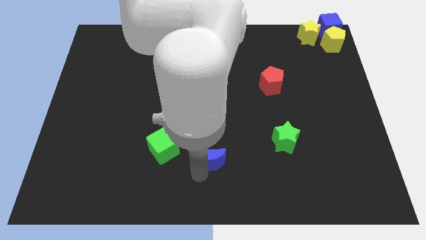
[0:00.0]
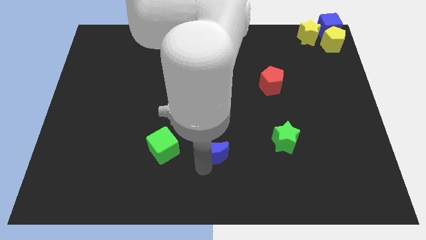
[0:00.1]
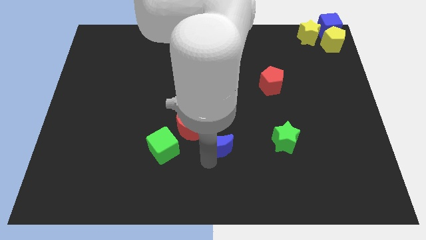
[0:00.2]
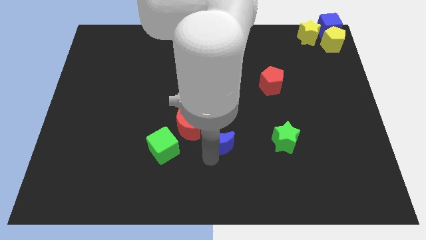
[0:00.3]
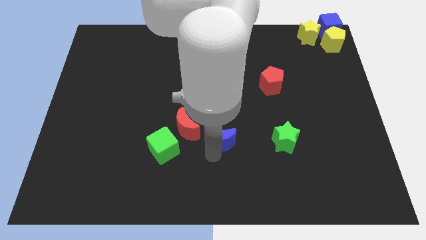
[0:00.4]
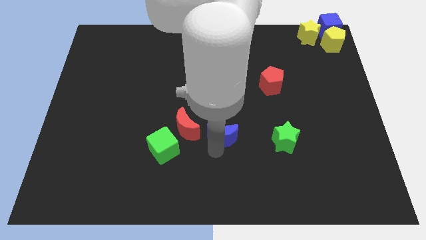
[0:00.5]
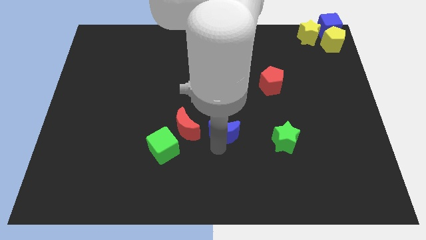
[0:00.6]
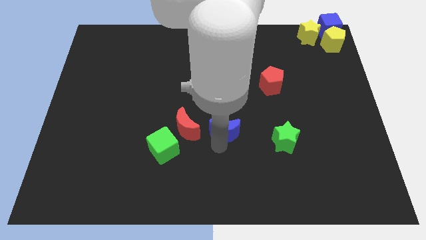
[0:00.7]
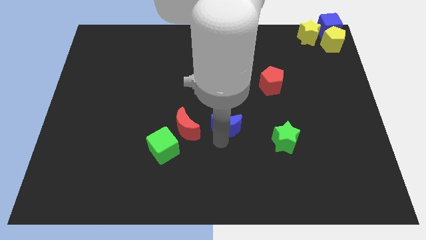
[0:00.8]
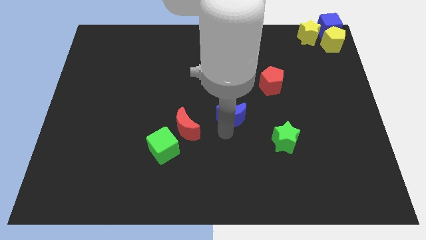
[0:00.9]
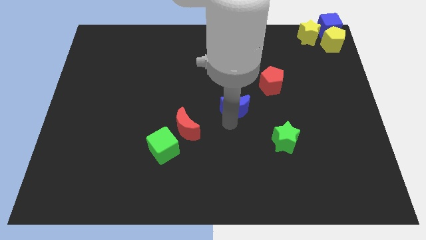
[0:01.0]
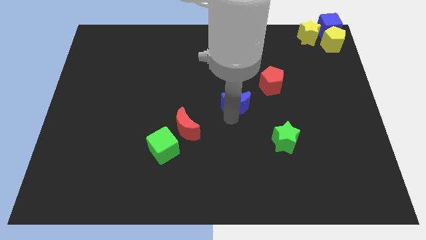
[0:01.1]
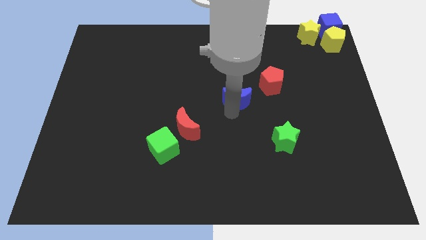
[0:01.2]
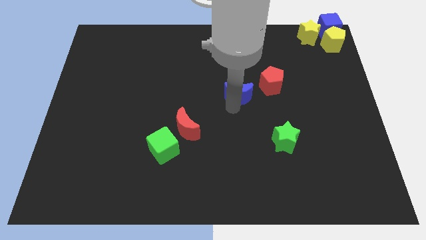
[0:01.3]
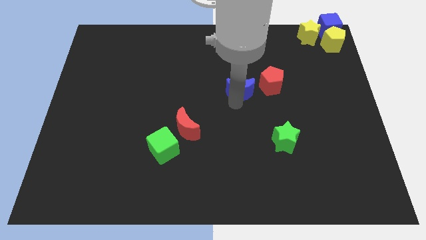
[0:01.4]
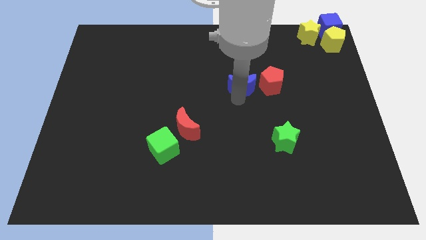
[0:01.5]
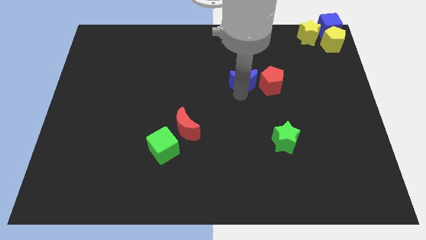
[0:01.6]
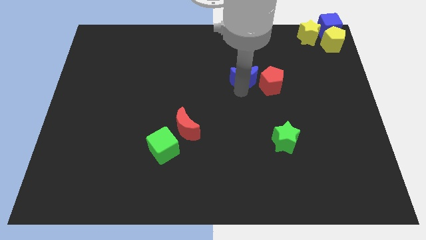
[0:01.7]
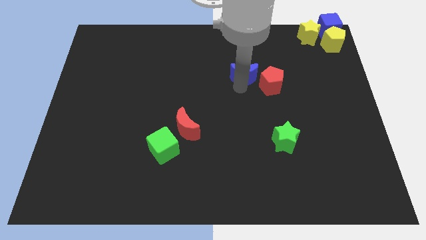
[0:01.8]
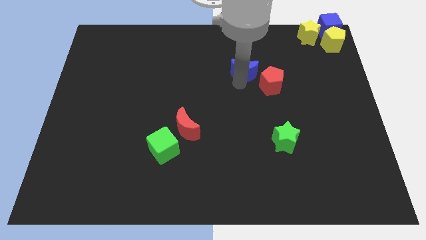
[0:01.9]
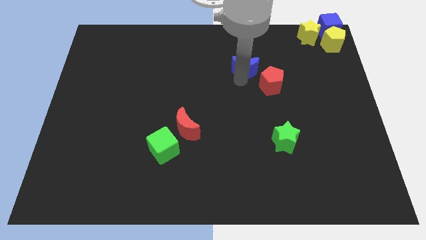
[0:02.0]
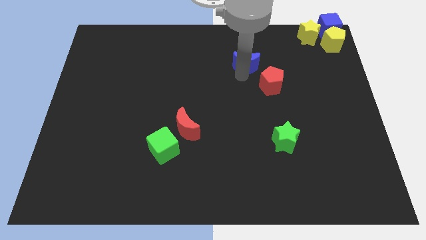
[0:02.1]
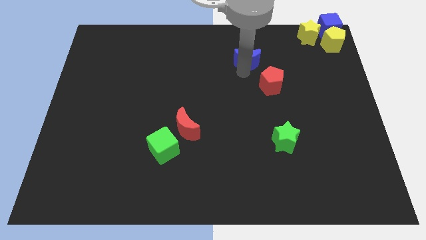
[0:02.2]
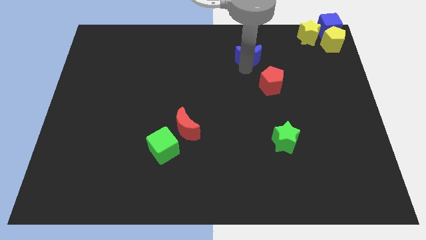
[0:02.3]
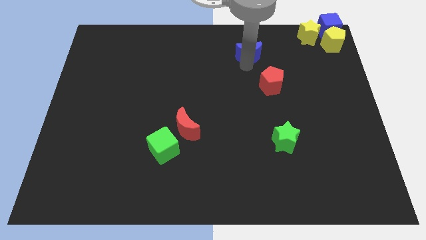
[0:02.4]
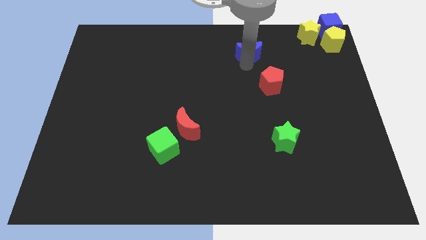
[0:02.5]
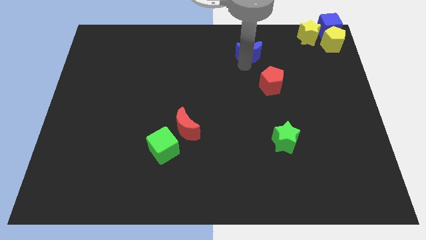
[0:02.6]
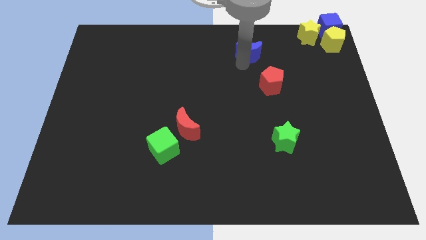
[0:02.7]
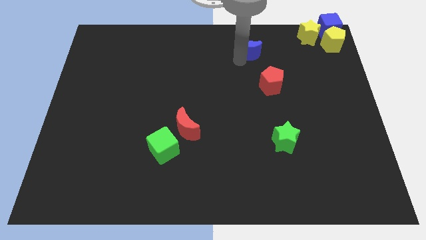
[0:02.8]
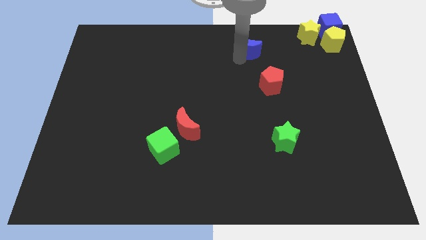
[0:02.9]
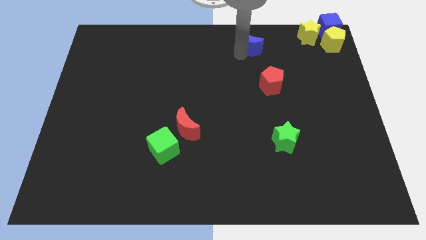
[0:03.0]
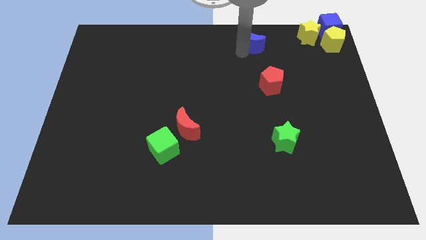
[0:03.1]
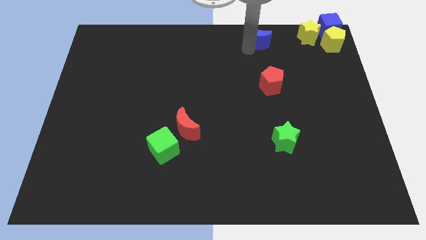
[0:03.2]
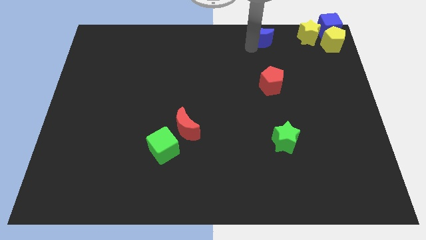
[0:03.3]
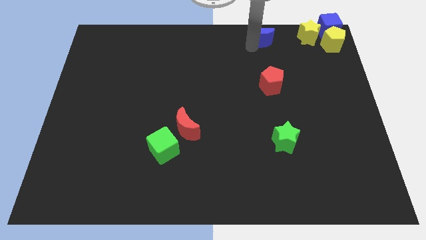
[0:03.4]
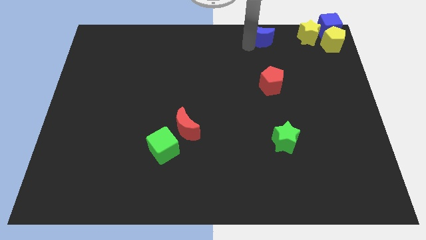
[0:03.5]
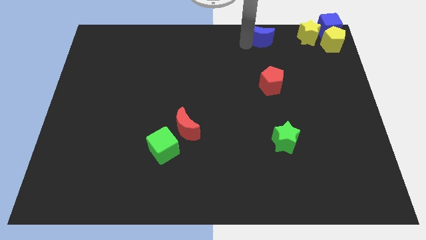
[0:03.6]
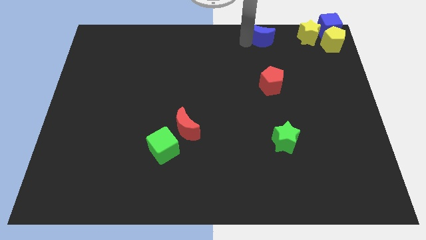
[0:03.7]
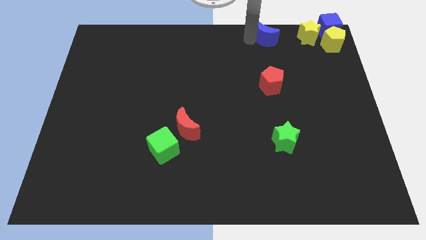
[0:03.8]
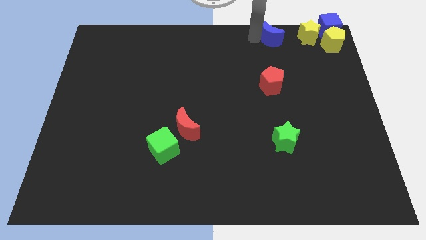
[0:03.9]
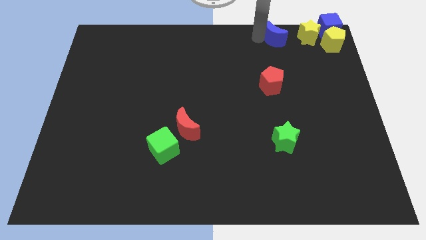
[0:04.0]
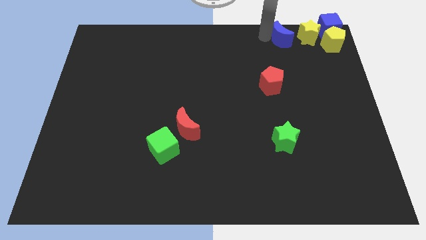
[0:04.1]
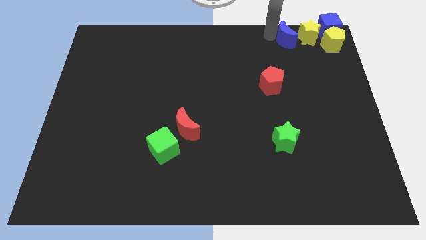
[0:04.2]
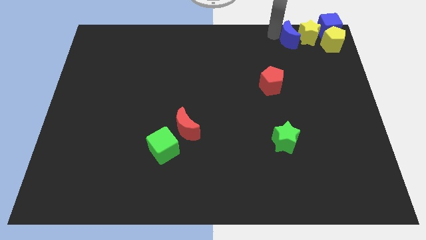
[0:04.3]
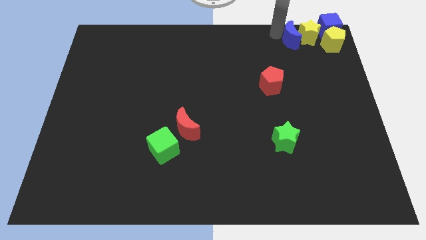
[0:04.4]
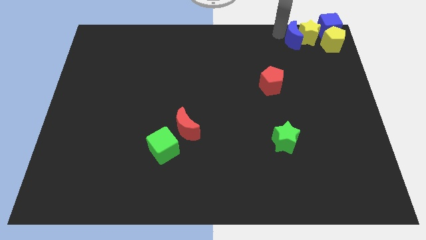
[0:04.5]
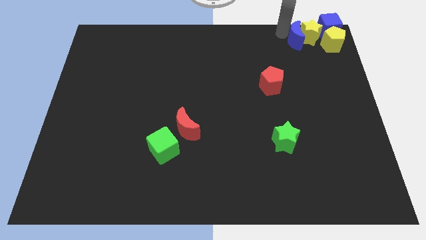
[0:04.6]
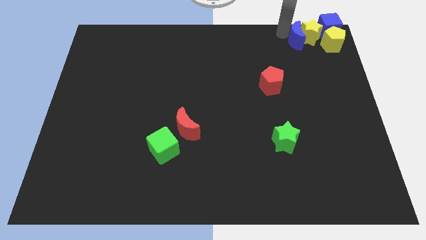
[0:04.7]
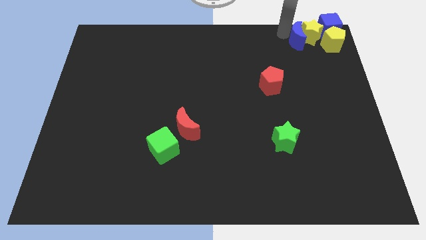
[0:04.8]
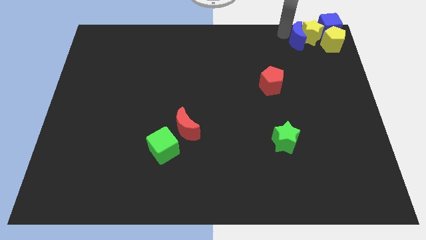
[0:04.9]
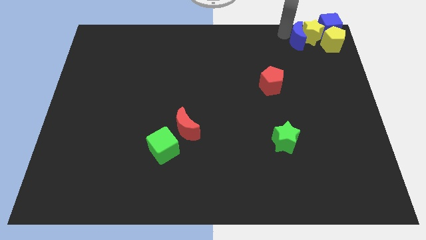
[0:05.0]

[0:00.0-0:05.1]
push the blue crescent into the yellow star

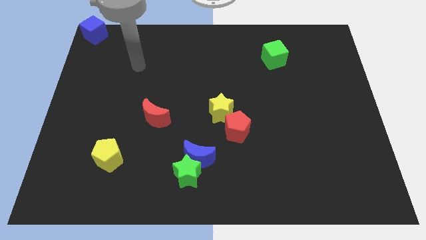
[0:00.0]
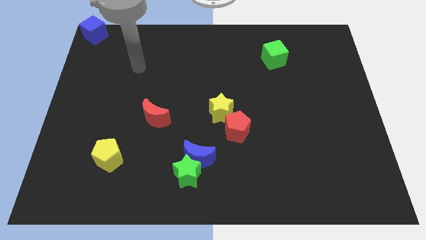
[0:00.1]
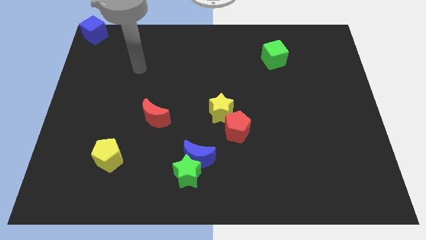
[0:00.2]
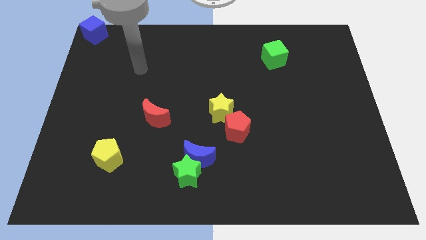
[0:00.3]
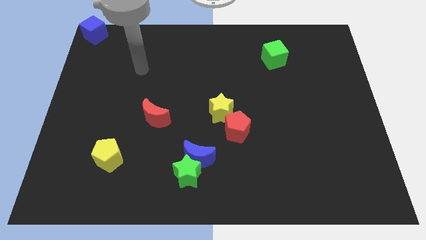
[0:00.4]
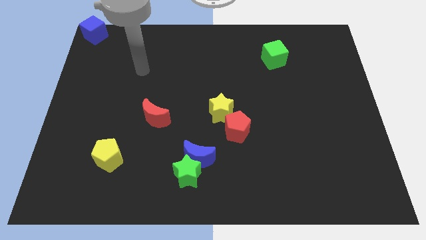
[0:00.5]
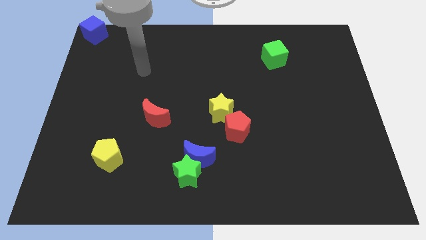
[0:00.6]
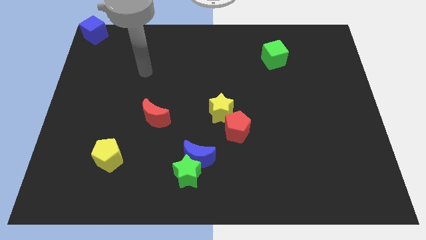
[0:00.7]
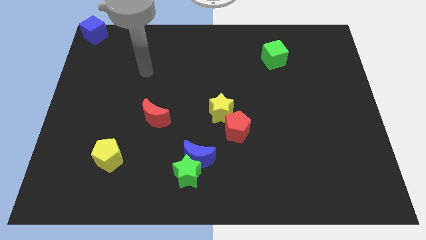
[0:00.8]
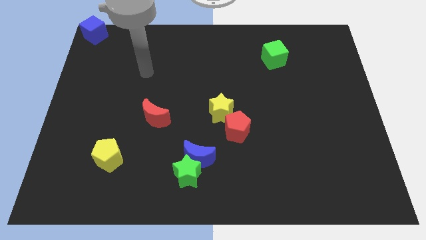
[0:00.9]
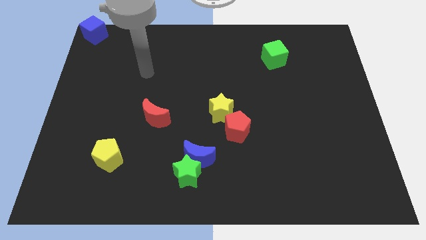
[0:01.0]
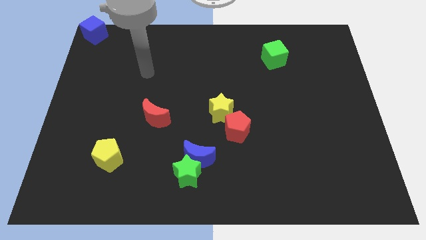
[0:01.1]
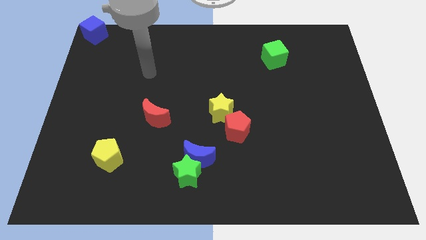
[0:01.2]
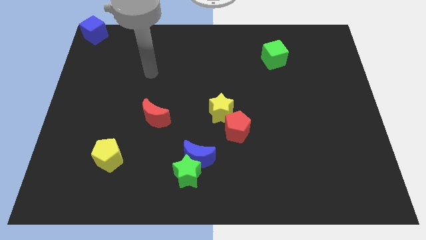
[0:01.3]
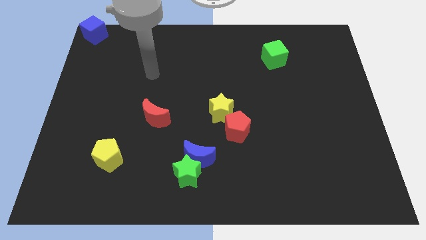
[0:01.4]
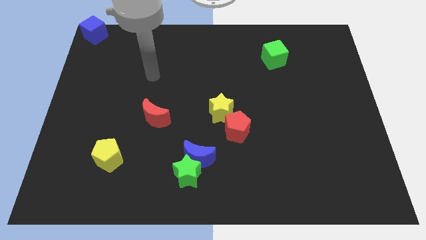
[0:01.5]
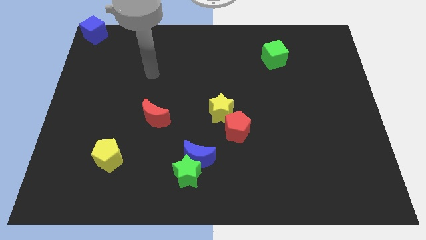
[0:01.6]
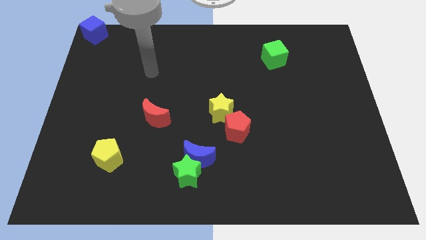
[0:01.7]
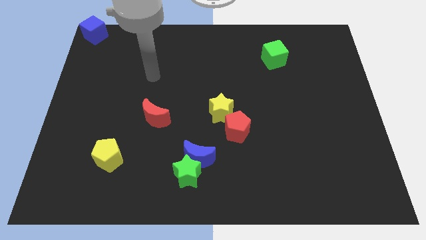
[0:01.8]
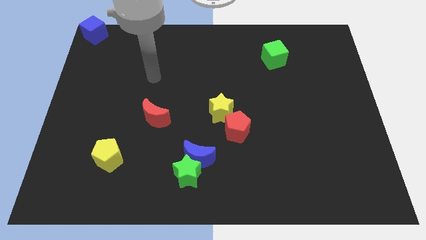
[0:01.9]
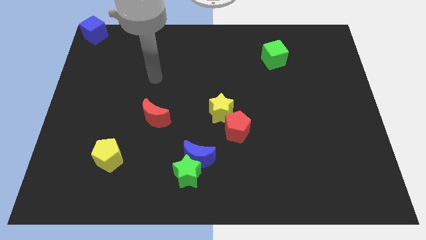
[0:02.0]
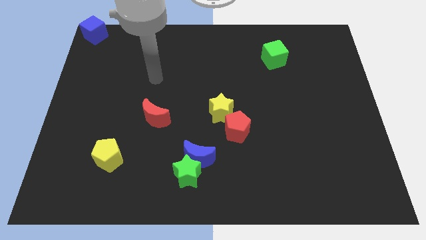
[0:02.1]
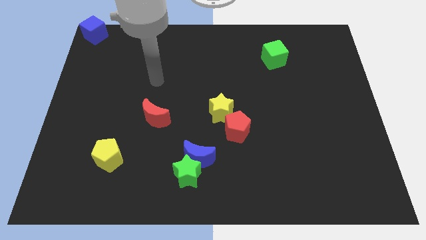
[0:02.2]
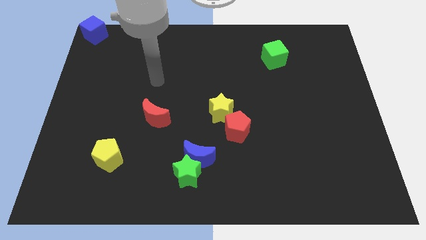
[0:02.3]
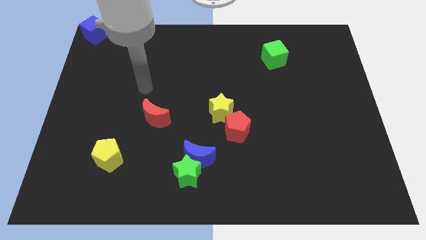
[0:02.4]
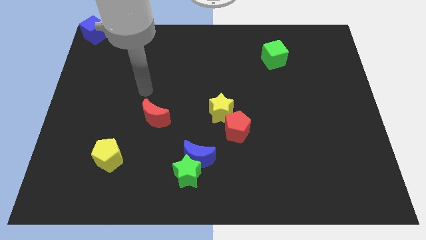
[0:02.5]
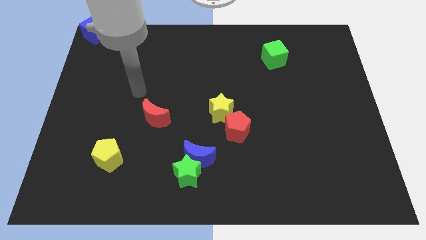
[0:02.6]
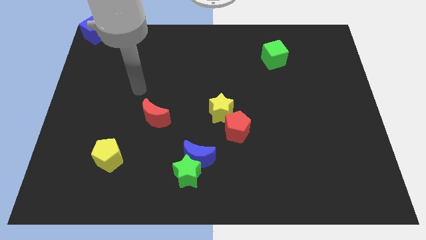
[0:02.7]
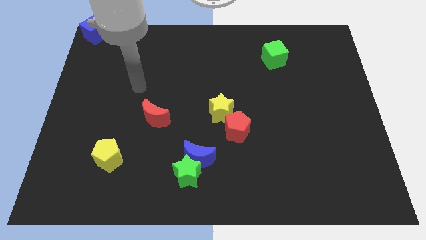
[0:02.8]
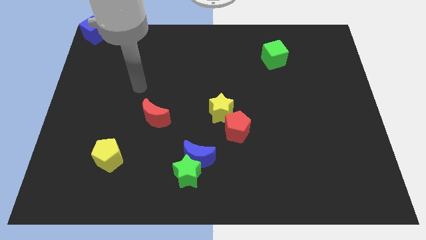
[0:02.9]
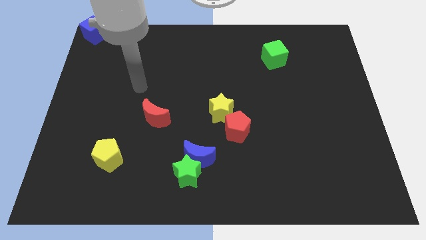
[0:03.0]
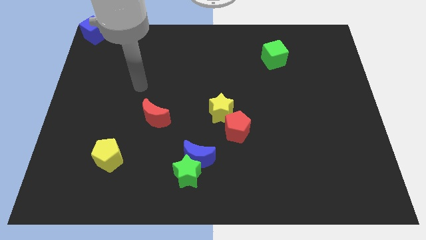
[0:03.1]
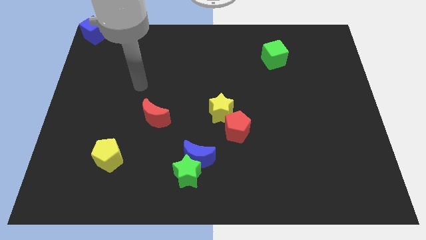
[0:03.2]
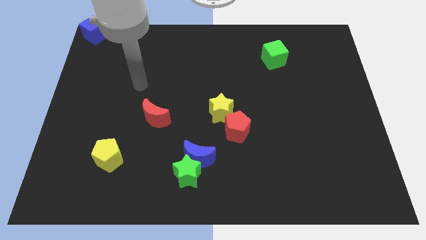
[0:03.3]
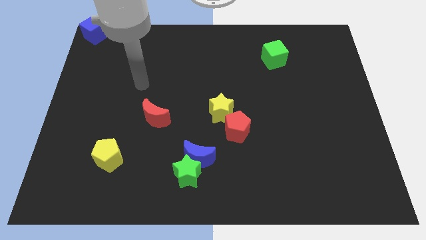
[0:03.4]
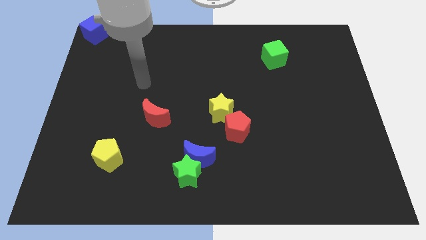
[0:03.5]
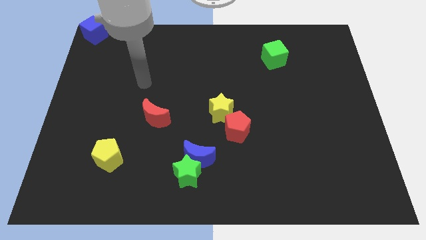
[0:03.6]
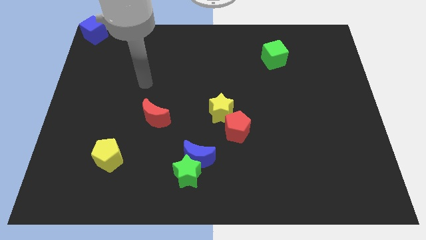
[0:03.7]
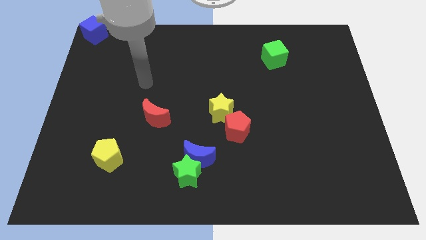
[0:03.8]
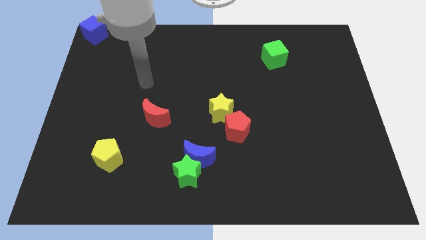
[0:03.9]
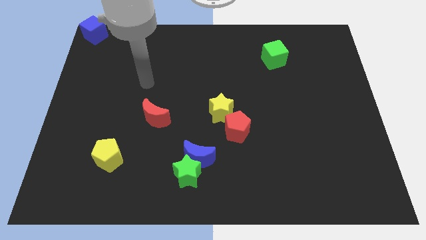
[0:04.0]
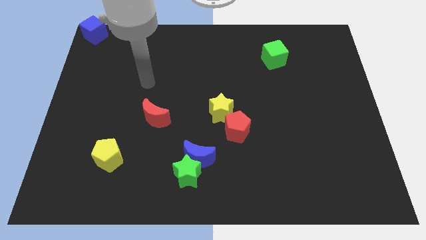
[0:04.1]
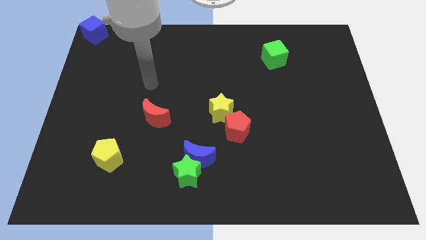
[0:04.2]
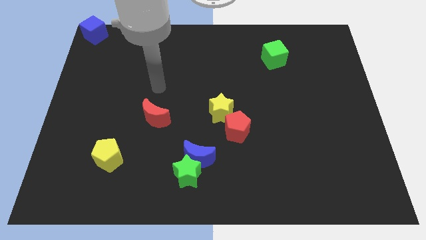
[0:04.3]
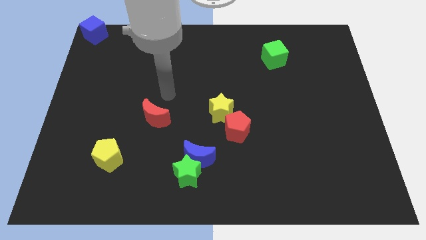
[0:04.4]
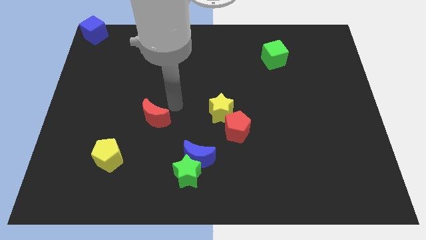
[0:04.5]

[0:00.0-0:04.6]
point your arm beside red moon
